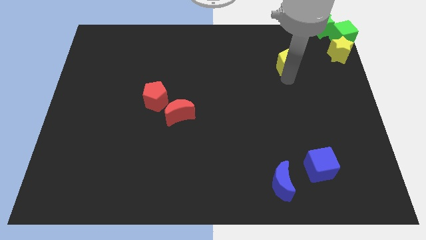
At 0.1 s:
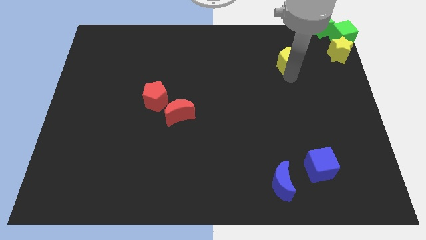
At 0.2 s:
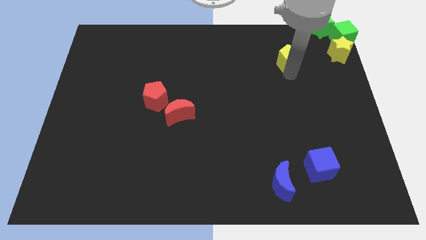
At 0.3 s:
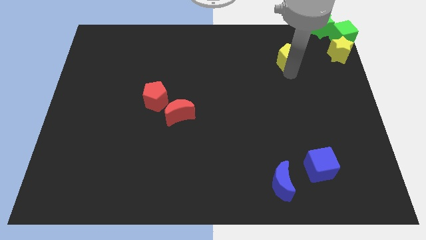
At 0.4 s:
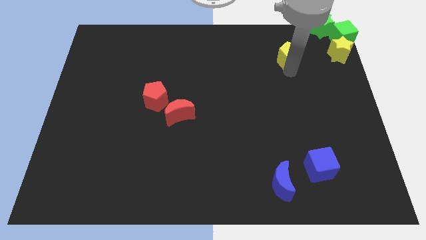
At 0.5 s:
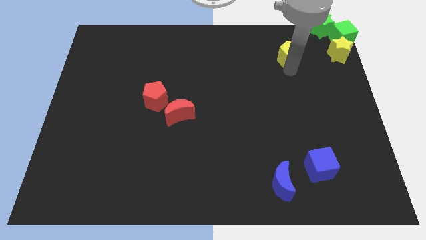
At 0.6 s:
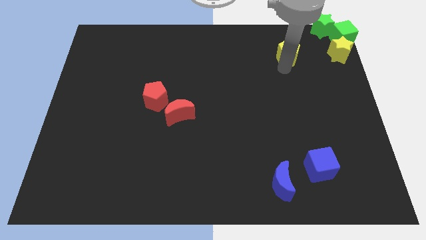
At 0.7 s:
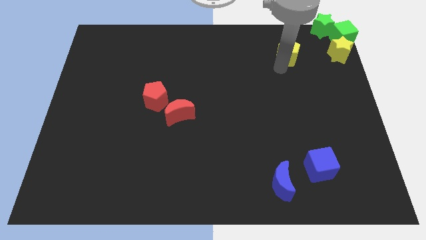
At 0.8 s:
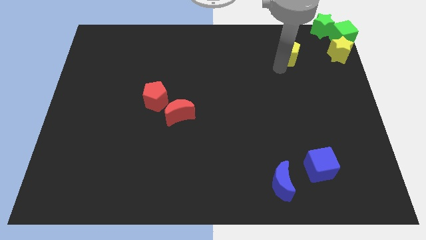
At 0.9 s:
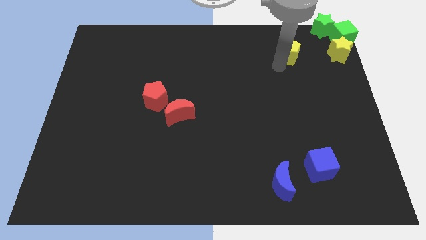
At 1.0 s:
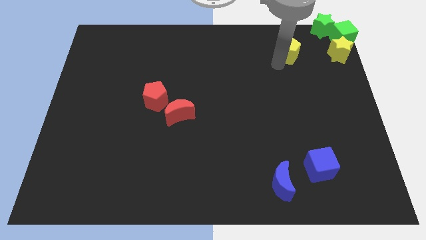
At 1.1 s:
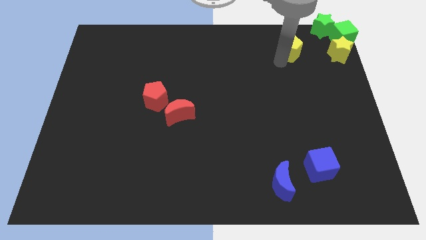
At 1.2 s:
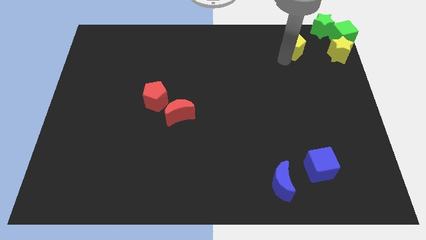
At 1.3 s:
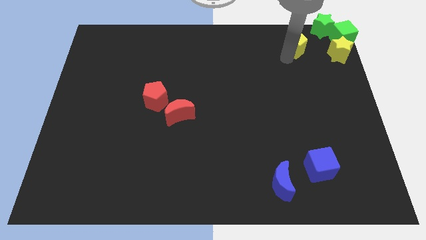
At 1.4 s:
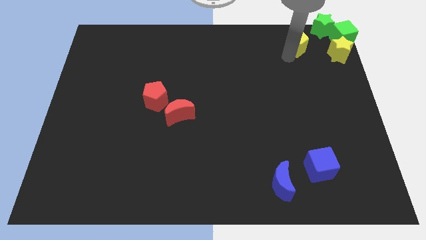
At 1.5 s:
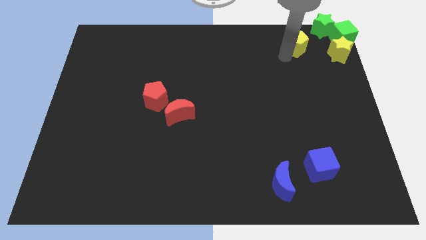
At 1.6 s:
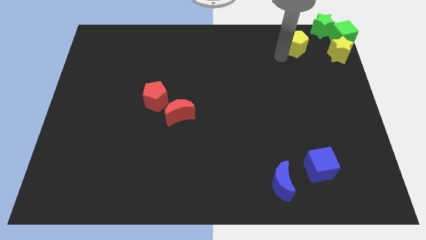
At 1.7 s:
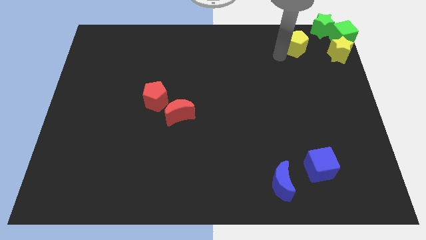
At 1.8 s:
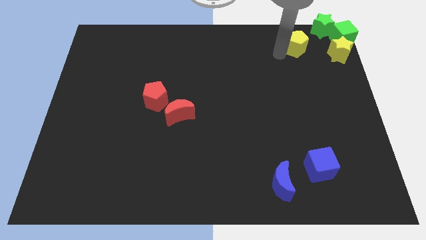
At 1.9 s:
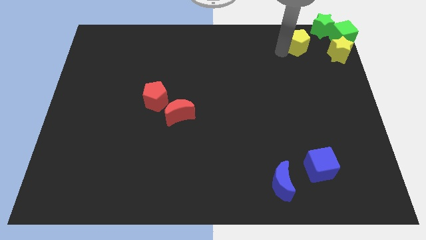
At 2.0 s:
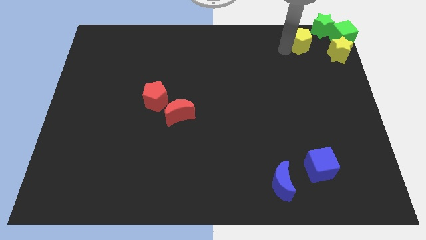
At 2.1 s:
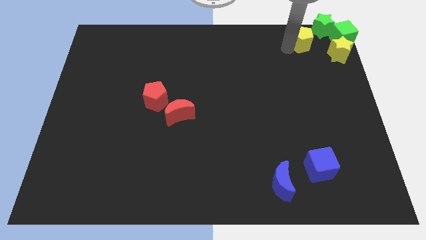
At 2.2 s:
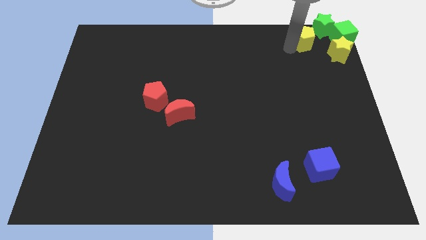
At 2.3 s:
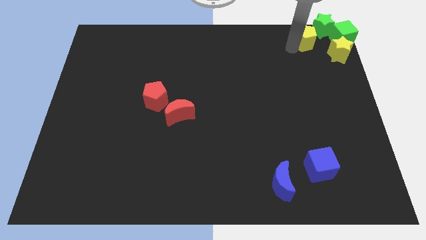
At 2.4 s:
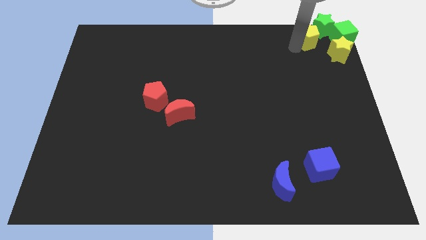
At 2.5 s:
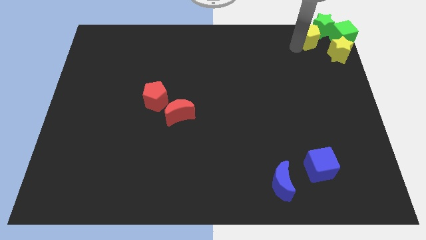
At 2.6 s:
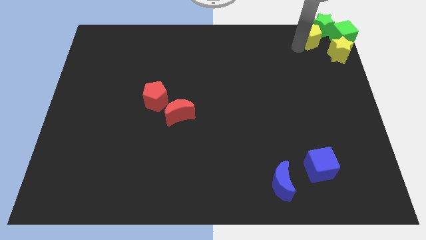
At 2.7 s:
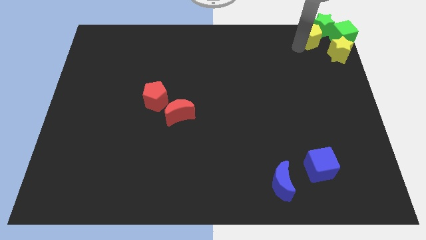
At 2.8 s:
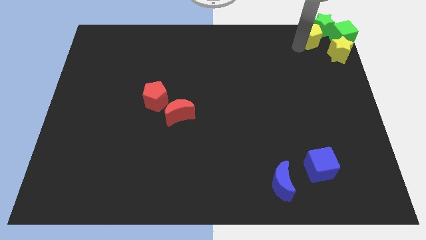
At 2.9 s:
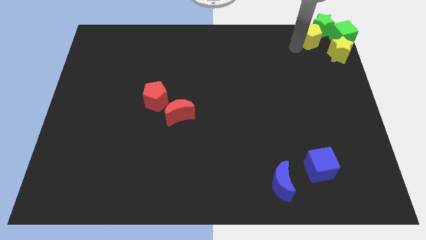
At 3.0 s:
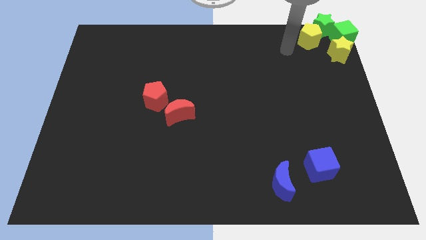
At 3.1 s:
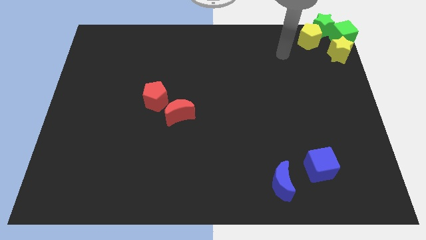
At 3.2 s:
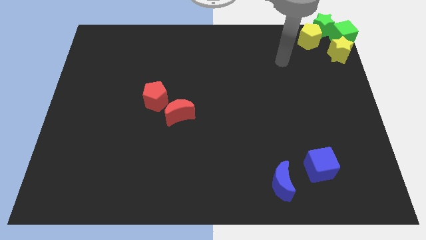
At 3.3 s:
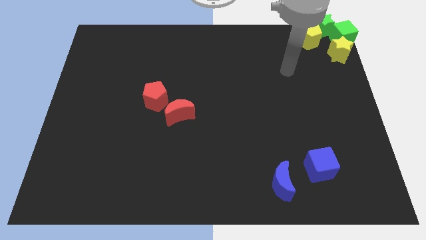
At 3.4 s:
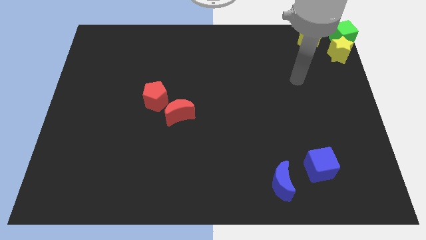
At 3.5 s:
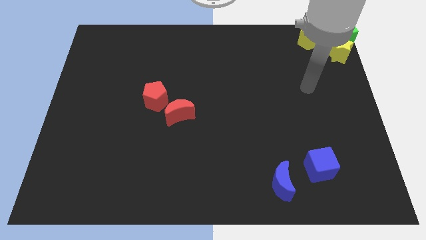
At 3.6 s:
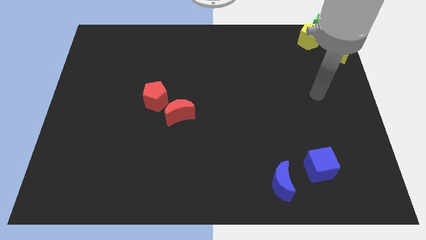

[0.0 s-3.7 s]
move the yellow pentagon diagonally bottom left to the green star

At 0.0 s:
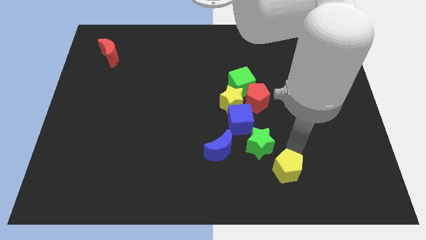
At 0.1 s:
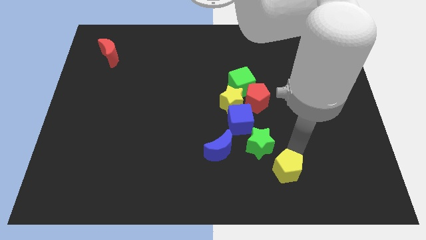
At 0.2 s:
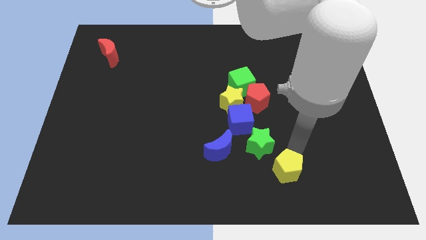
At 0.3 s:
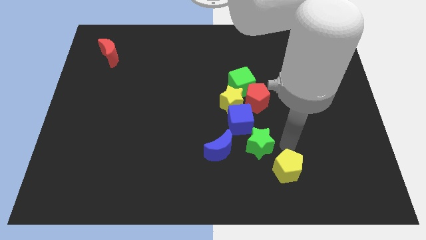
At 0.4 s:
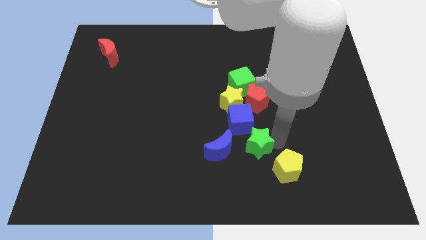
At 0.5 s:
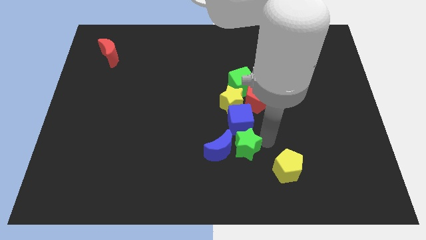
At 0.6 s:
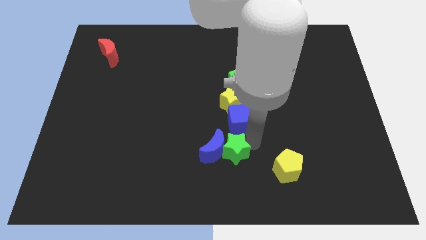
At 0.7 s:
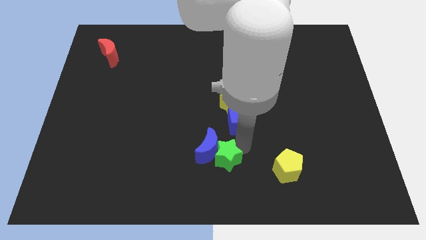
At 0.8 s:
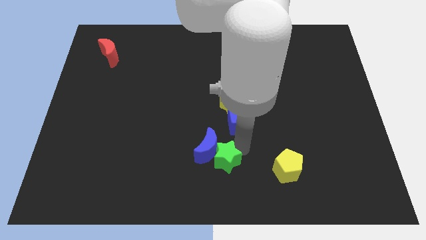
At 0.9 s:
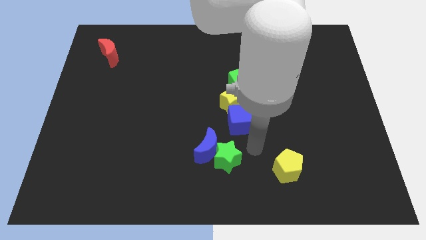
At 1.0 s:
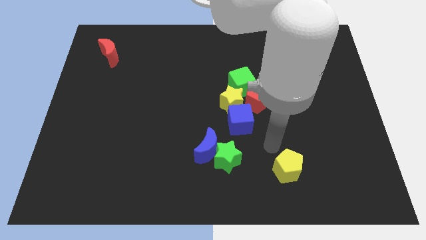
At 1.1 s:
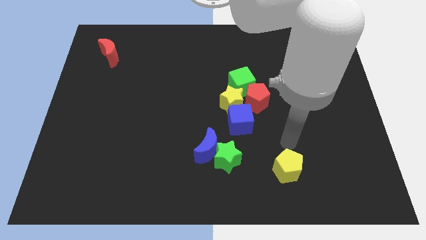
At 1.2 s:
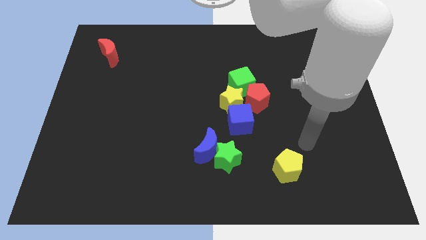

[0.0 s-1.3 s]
move green star into the blue moon

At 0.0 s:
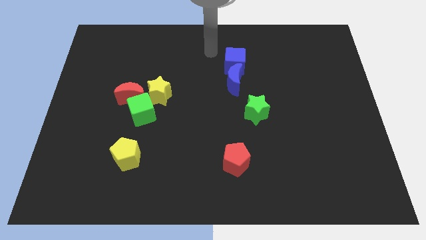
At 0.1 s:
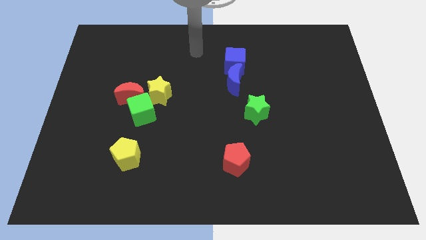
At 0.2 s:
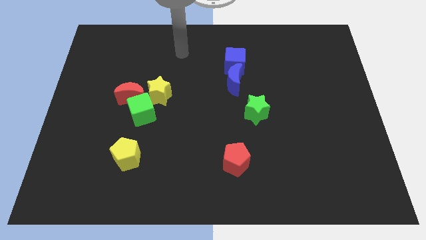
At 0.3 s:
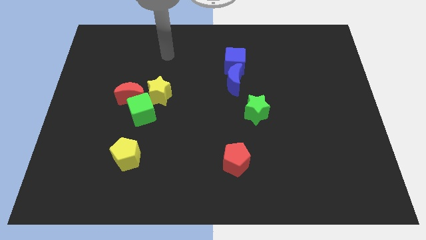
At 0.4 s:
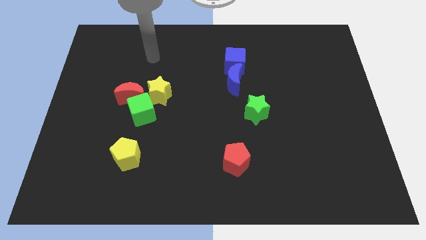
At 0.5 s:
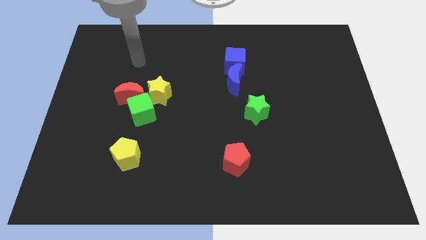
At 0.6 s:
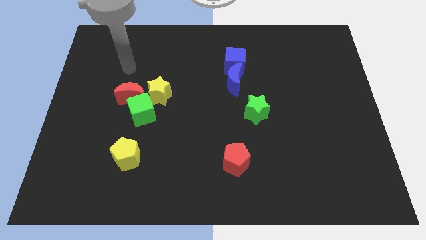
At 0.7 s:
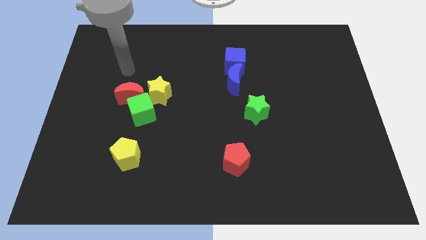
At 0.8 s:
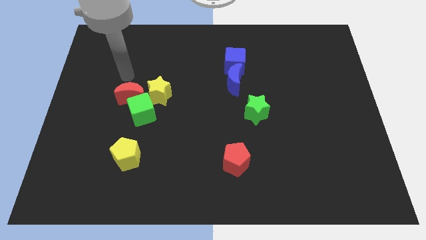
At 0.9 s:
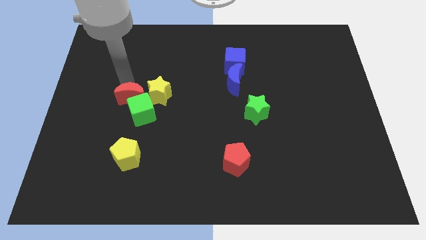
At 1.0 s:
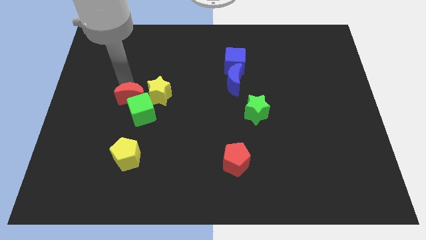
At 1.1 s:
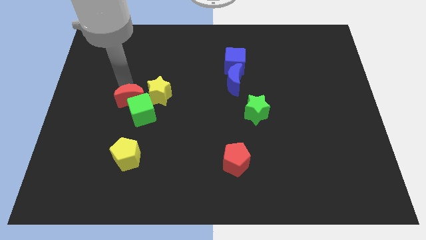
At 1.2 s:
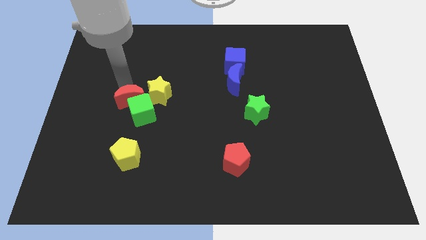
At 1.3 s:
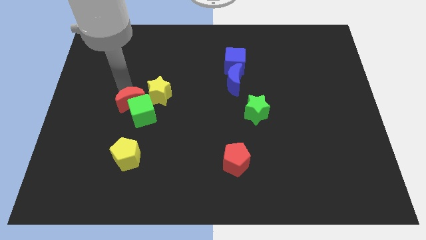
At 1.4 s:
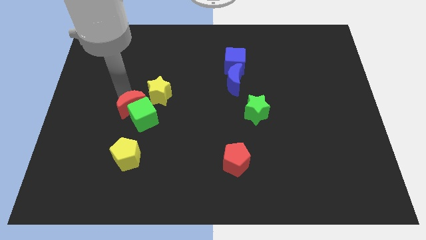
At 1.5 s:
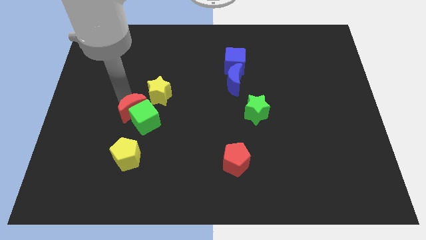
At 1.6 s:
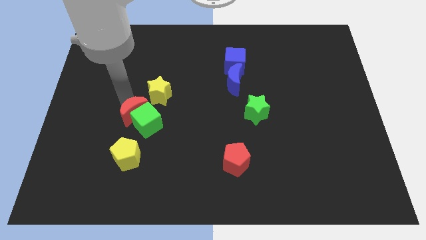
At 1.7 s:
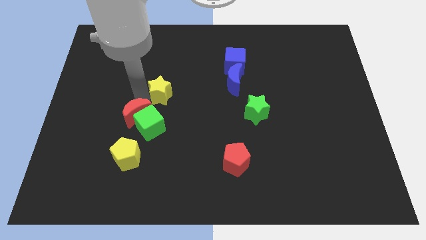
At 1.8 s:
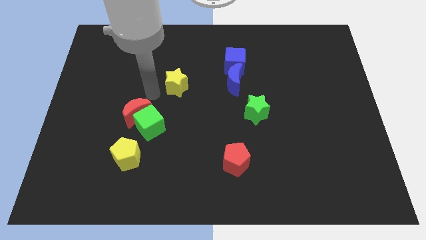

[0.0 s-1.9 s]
move the red moon along with the green cube towards the bottom side

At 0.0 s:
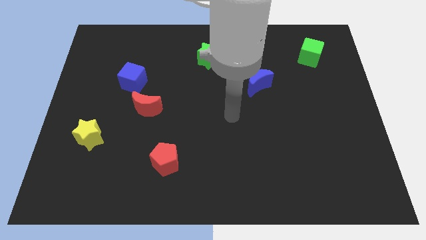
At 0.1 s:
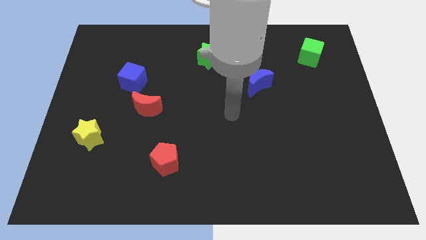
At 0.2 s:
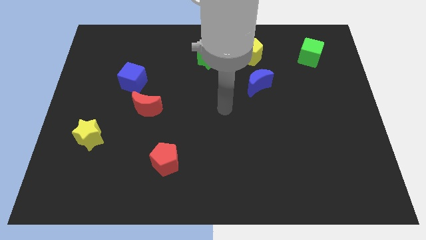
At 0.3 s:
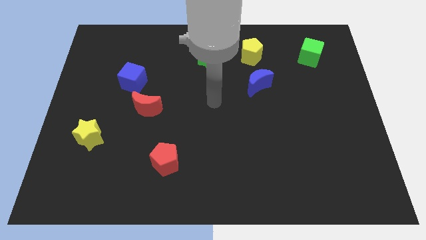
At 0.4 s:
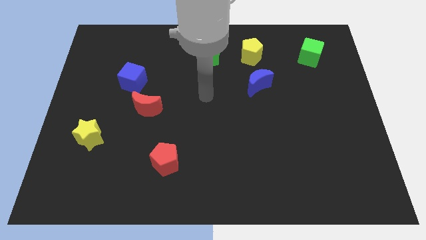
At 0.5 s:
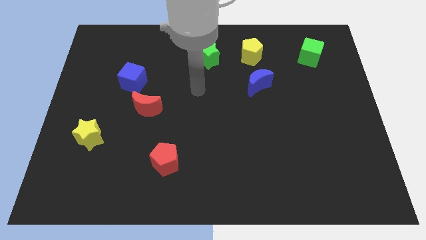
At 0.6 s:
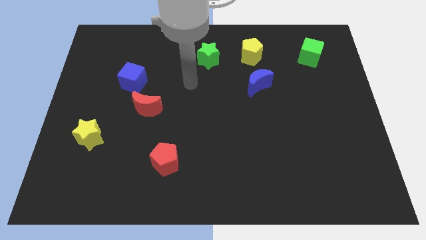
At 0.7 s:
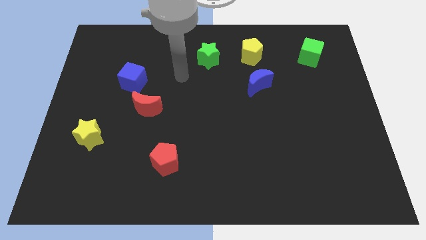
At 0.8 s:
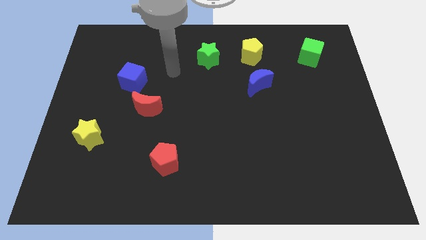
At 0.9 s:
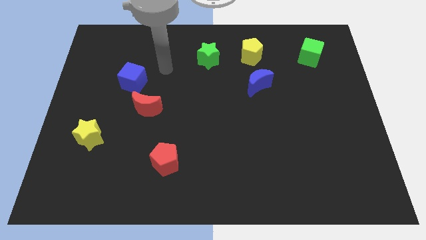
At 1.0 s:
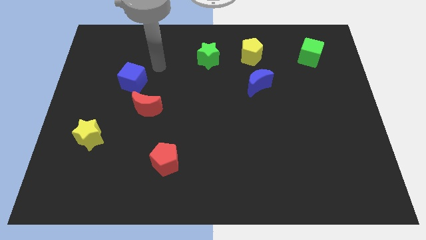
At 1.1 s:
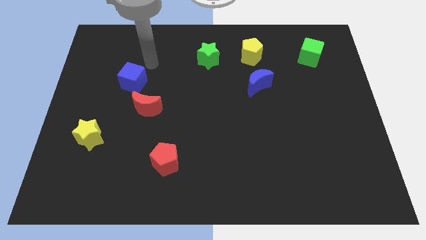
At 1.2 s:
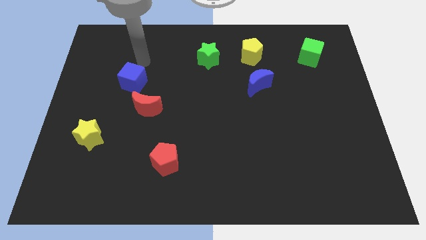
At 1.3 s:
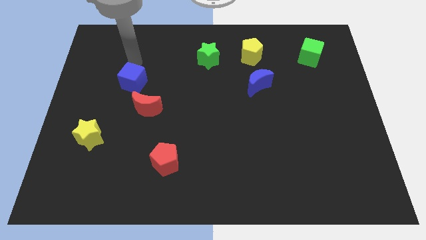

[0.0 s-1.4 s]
point your hand at the top side of the blue cube

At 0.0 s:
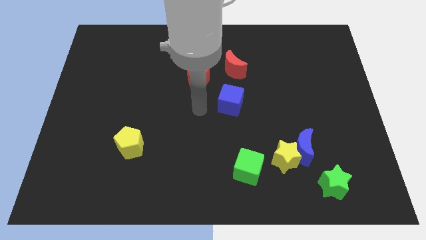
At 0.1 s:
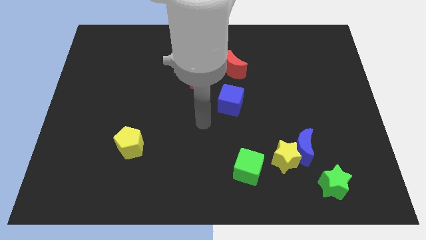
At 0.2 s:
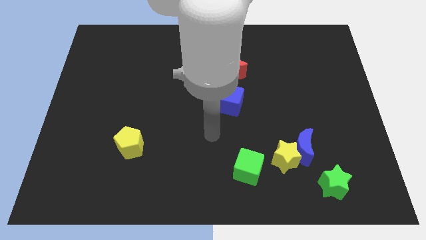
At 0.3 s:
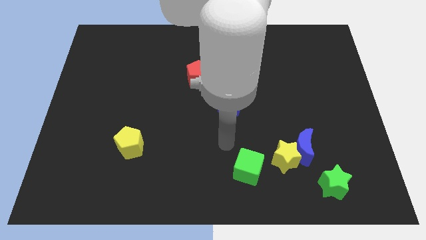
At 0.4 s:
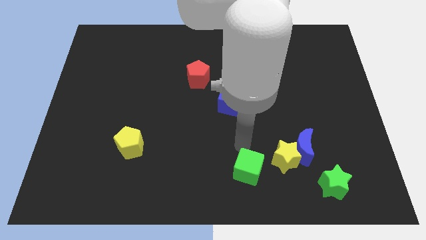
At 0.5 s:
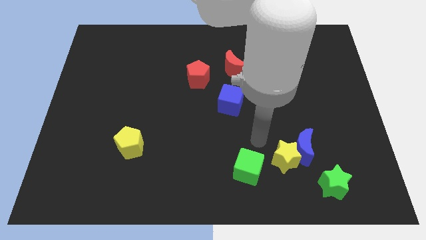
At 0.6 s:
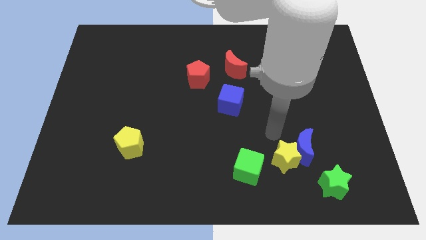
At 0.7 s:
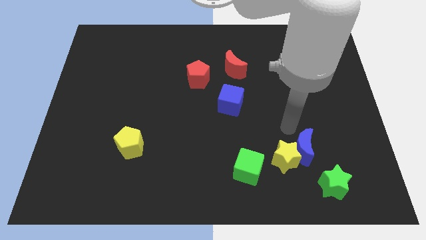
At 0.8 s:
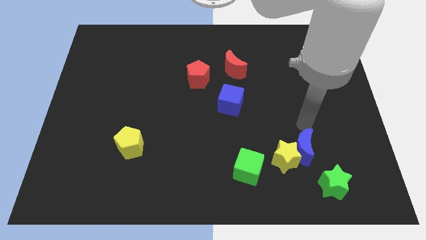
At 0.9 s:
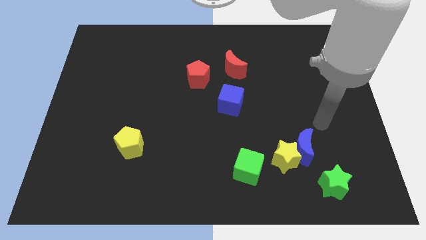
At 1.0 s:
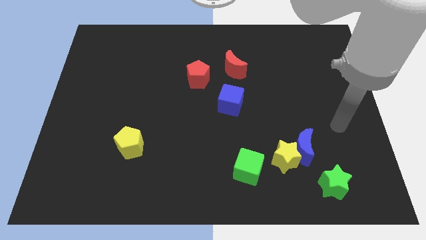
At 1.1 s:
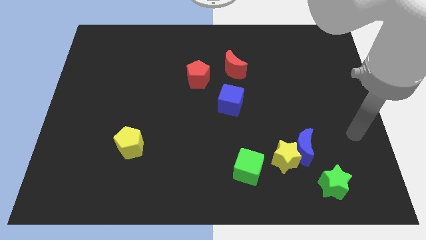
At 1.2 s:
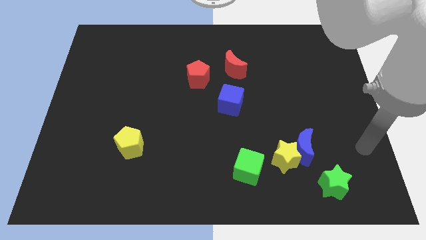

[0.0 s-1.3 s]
place your arm to the right of the blue crescent
